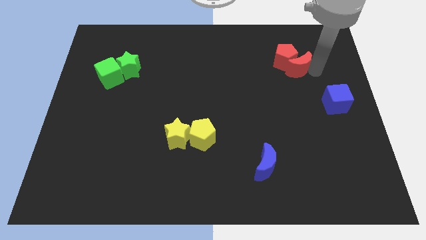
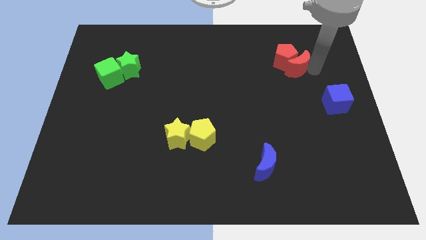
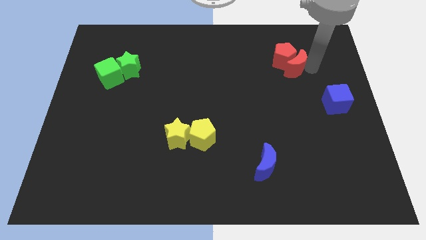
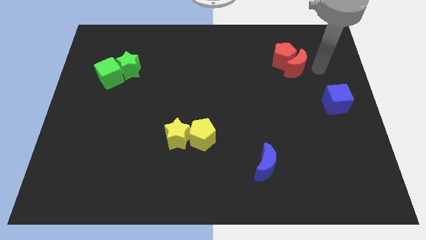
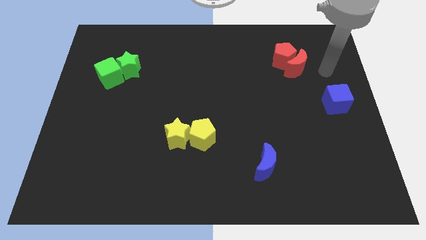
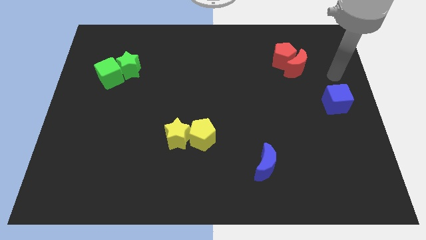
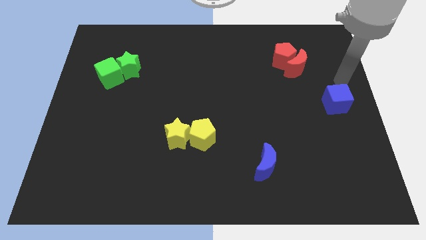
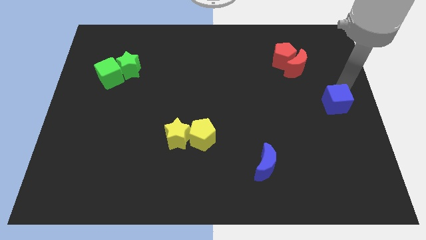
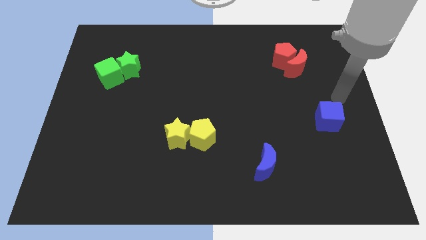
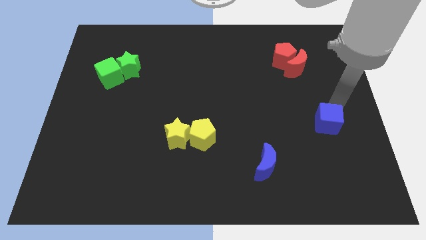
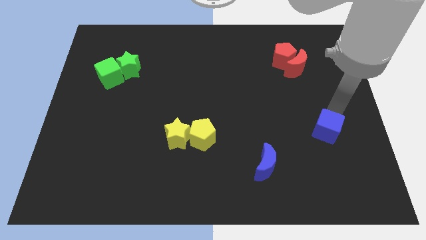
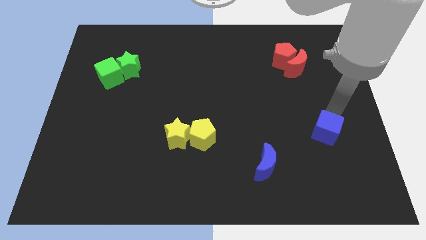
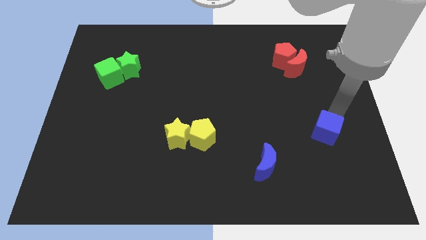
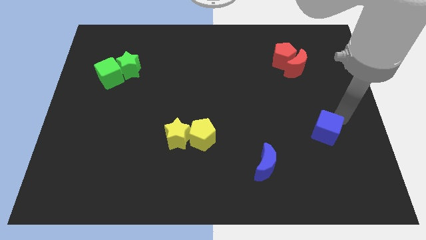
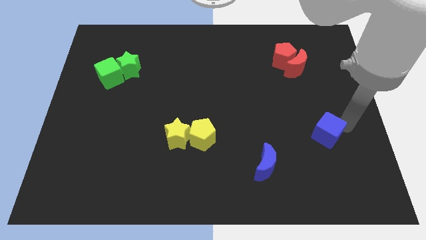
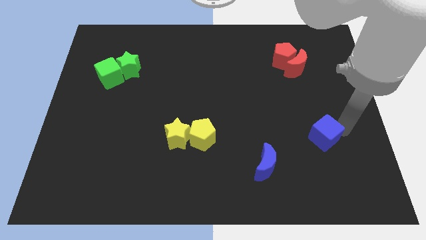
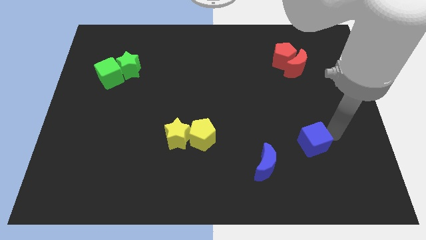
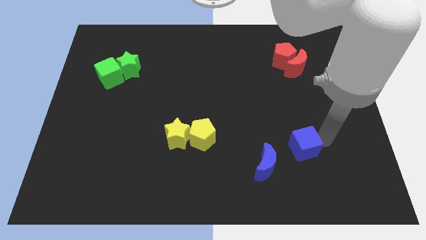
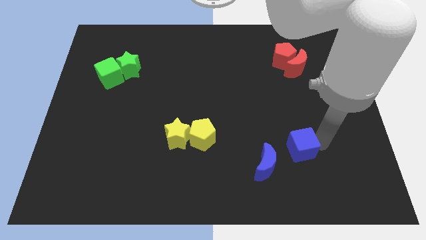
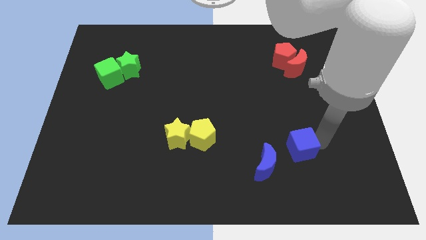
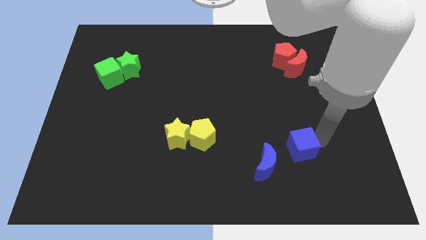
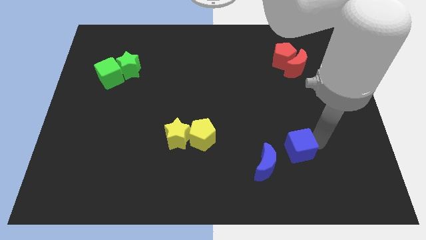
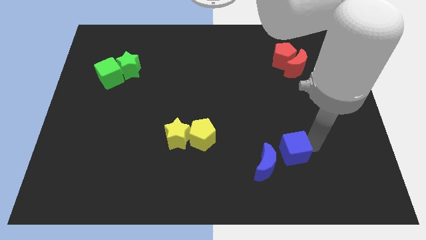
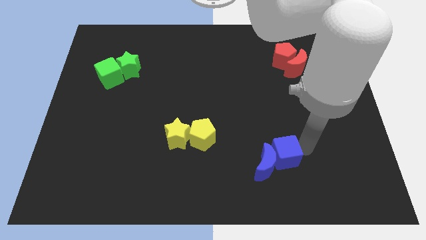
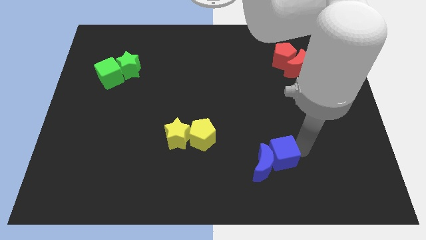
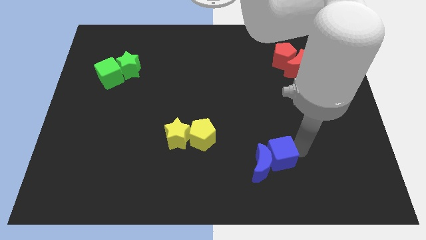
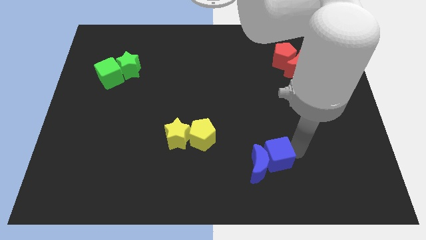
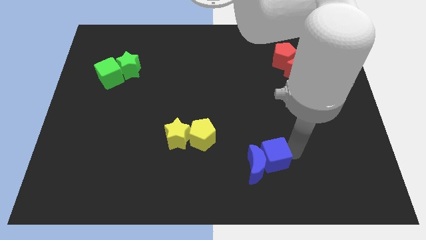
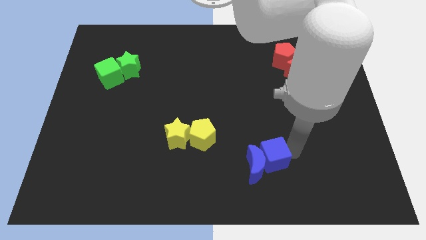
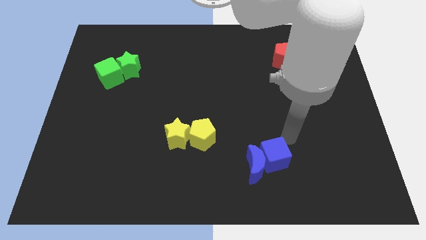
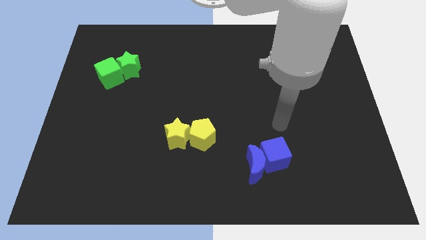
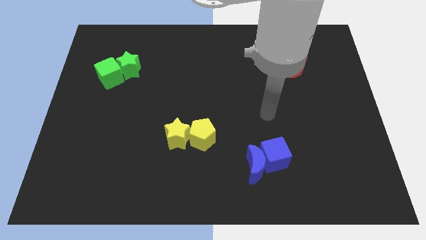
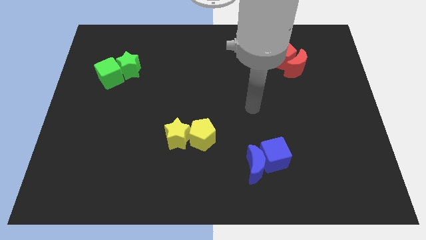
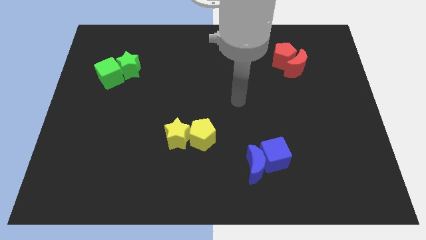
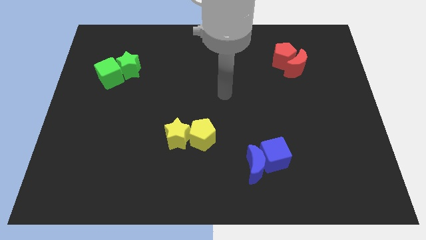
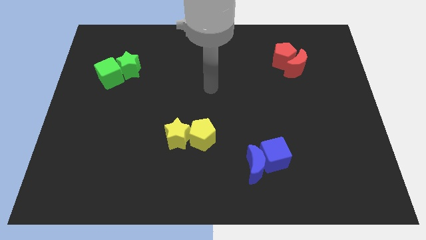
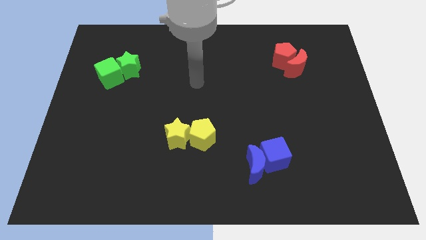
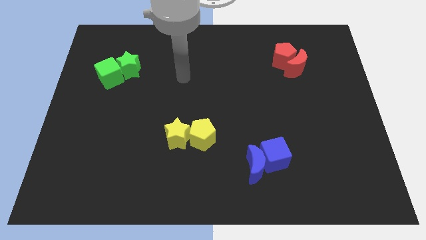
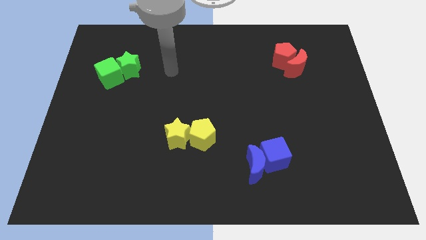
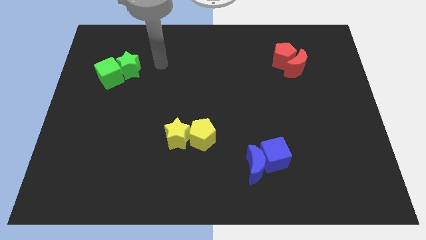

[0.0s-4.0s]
push the blue cube close to the blue crescent to its right side

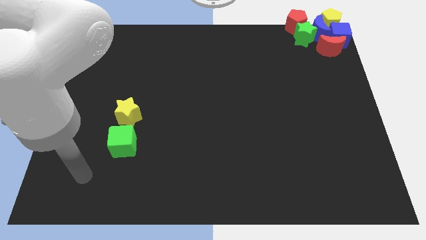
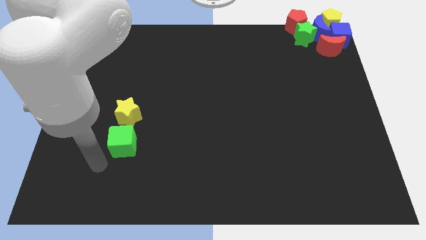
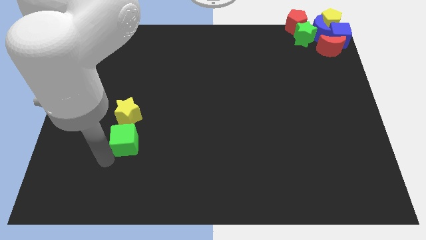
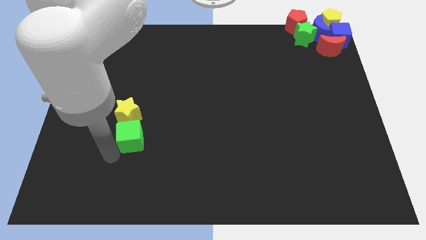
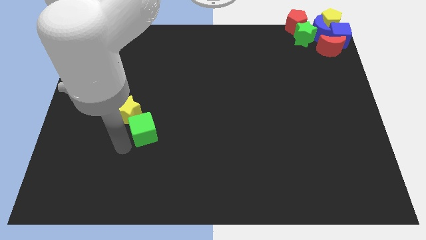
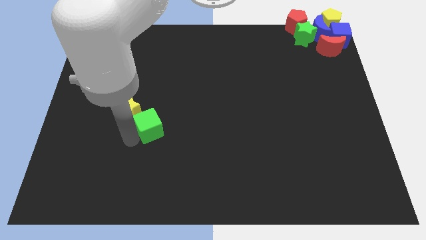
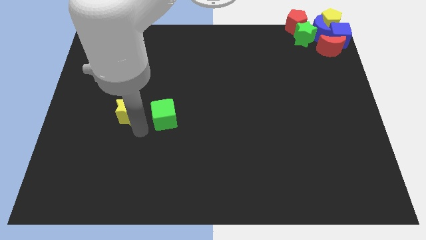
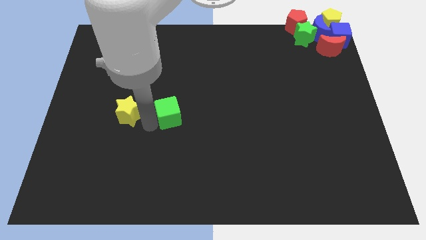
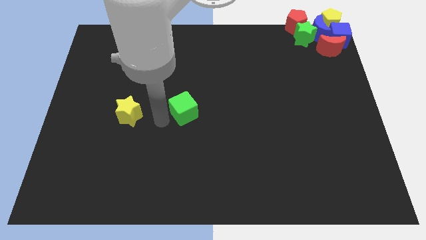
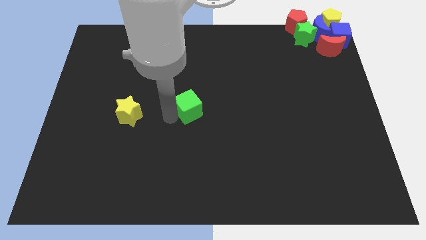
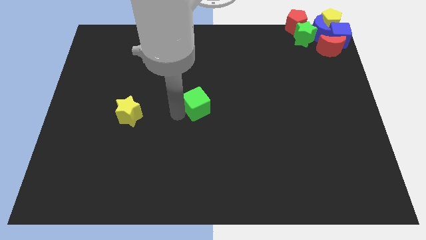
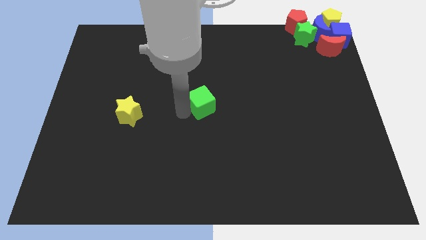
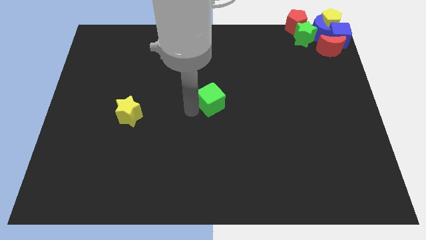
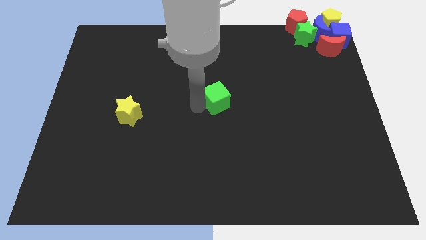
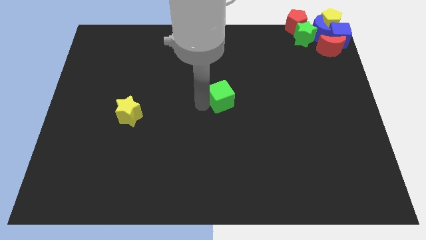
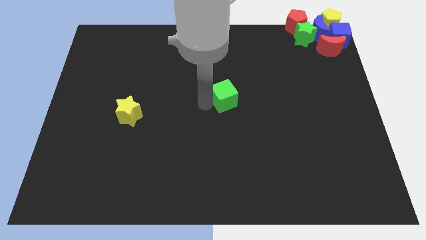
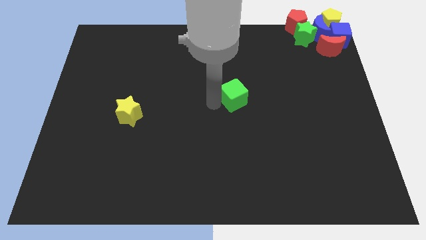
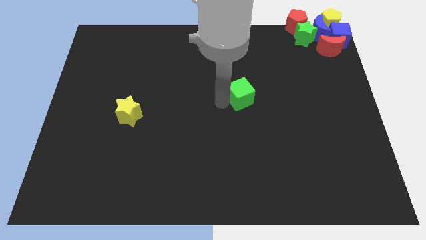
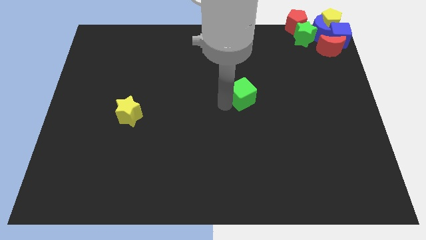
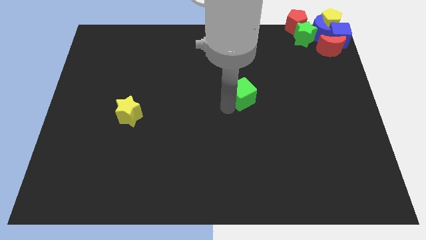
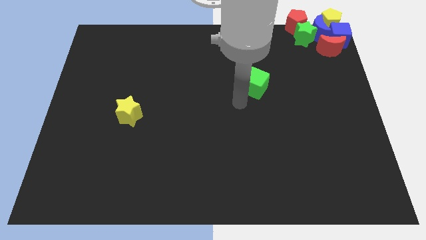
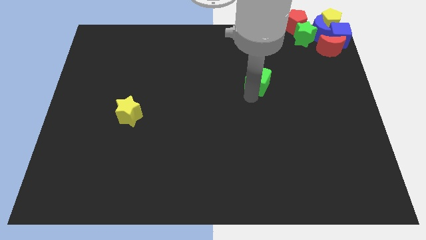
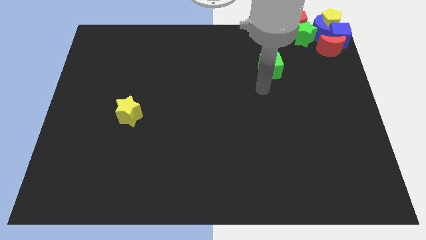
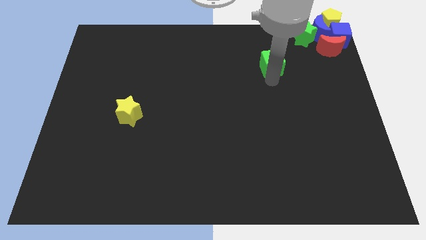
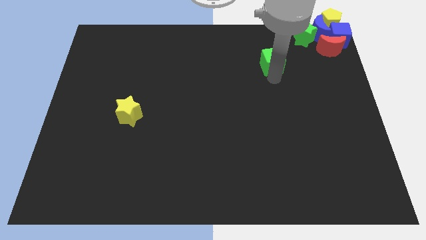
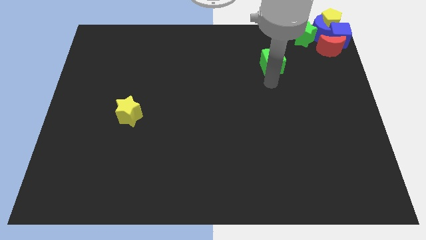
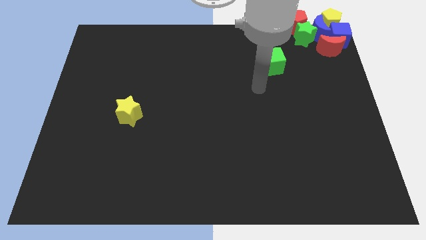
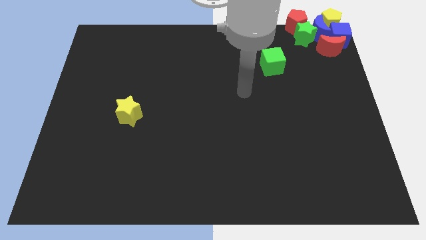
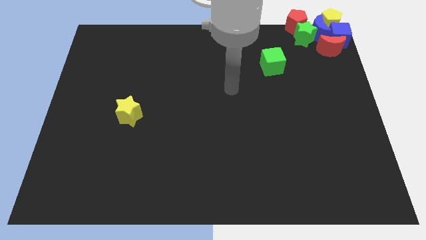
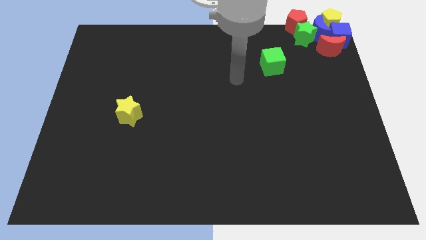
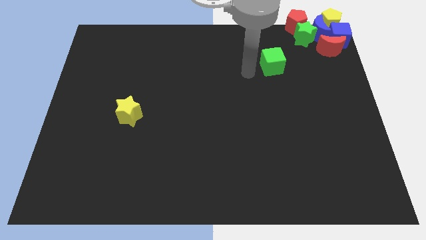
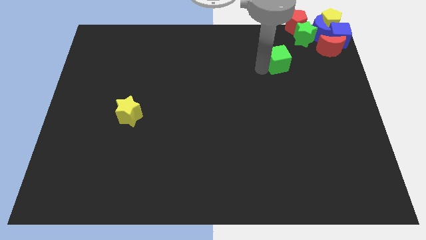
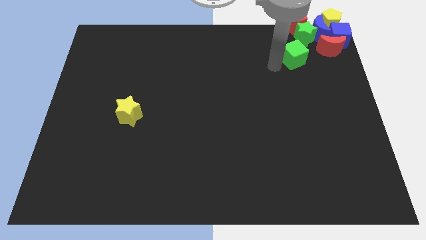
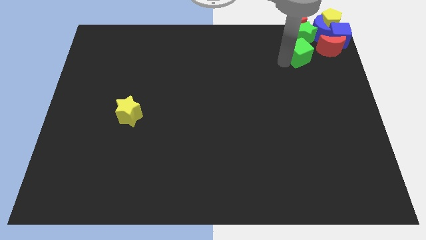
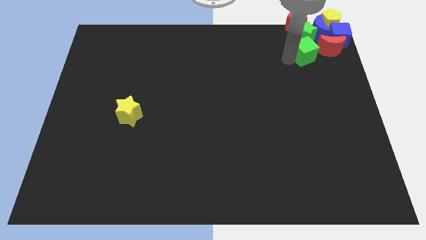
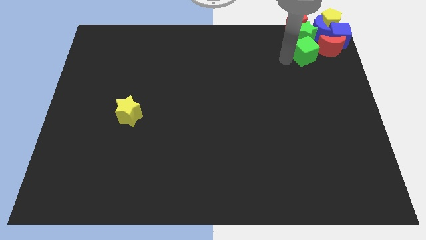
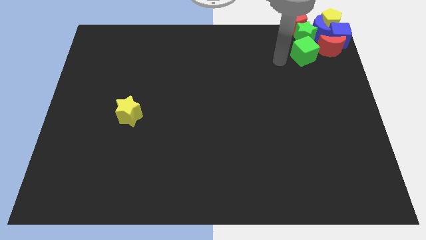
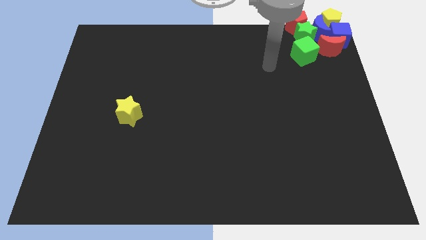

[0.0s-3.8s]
slide the green cube below green star

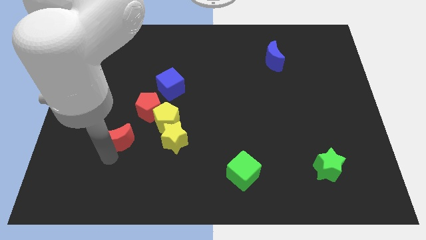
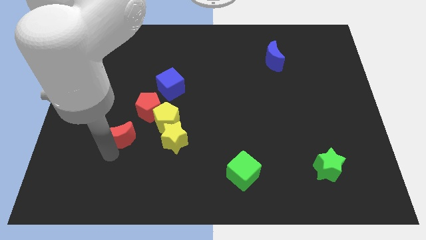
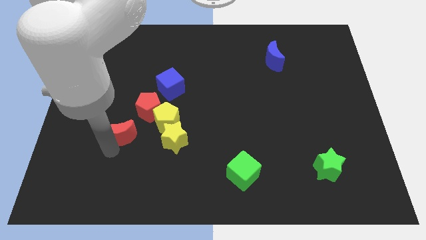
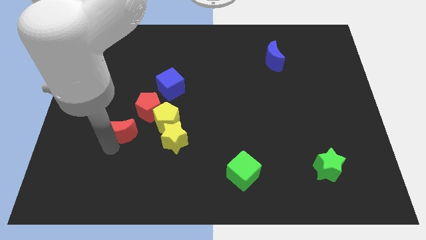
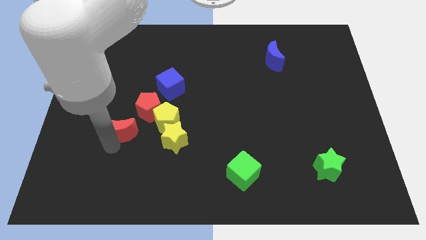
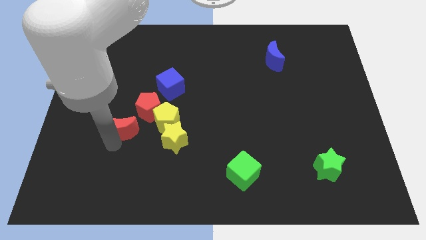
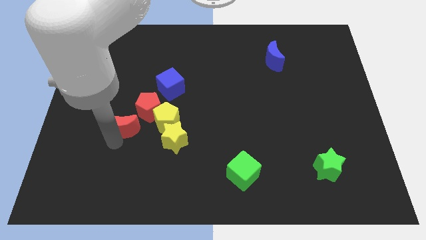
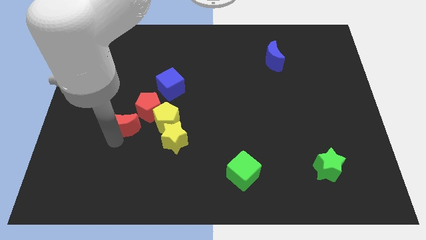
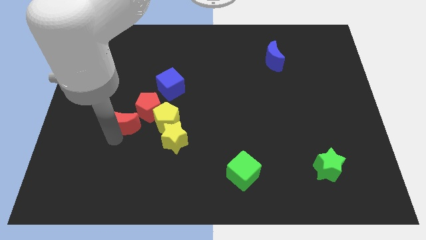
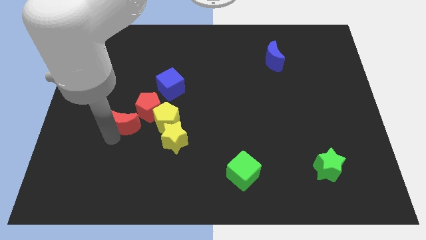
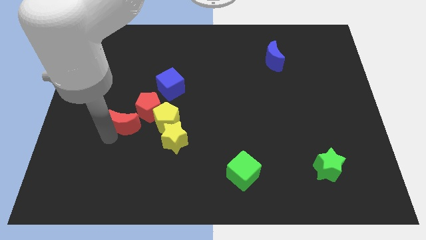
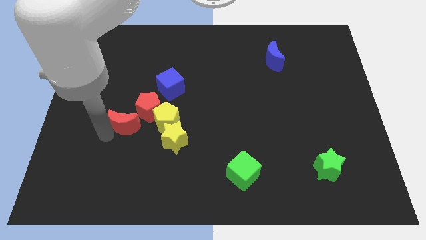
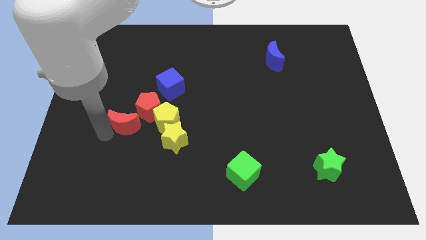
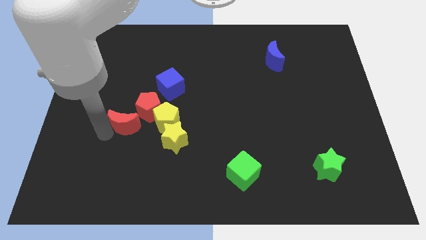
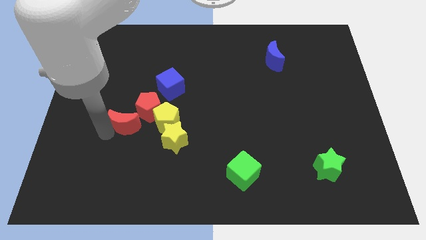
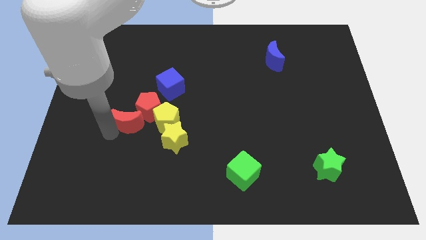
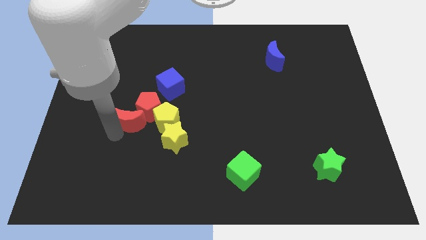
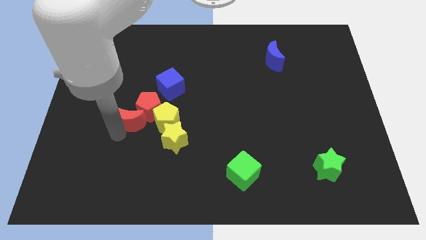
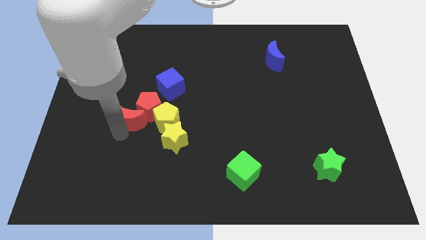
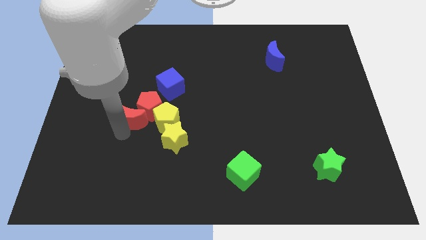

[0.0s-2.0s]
push the red crescent close to red pentagon
